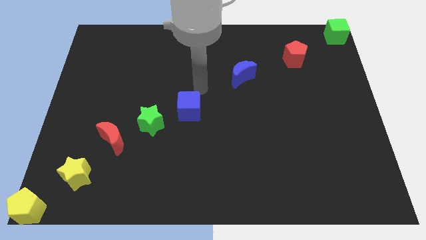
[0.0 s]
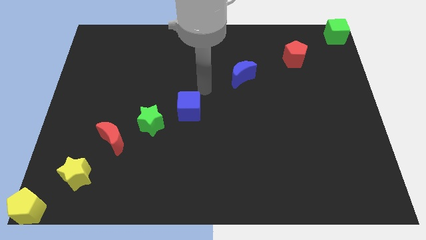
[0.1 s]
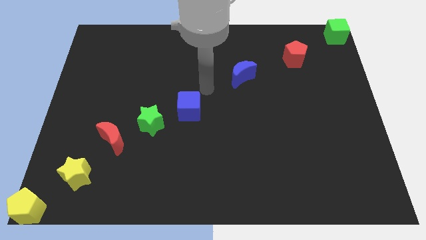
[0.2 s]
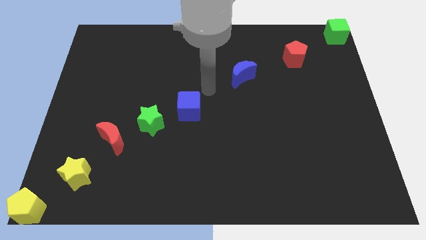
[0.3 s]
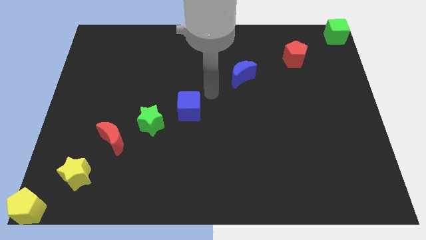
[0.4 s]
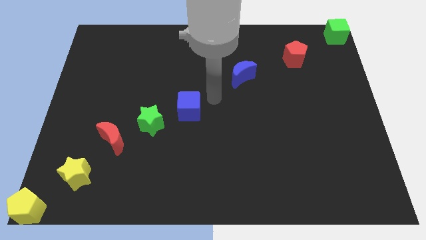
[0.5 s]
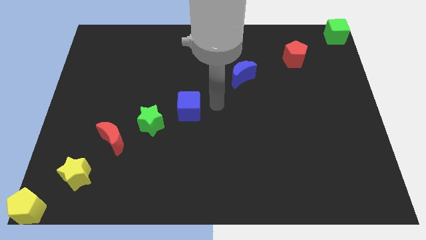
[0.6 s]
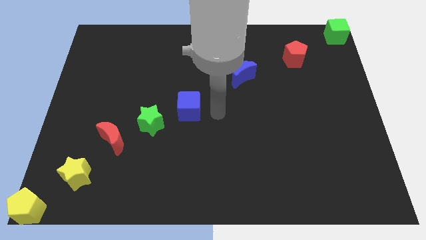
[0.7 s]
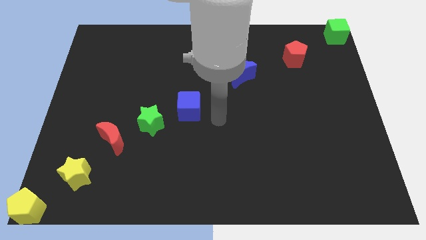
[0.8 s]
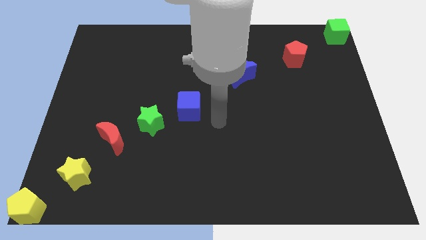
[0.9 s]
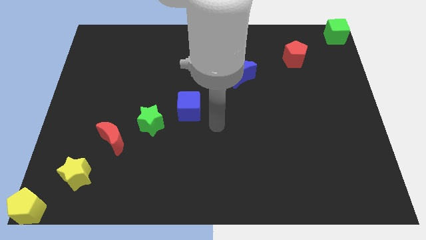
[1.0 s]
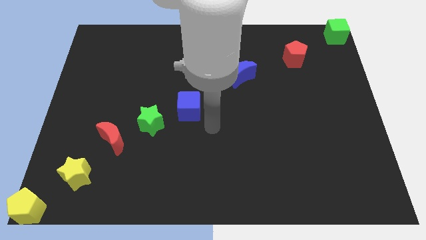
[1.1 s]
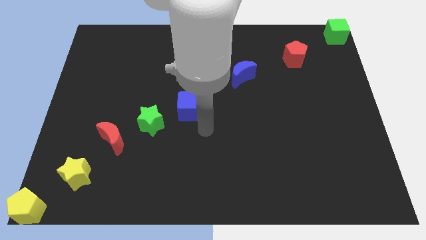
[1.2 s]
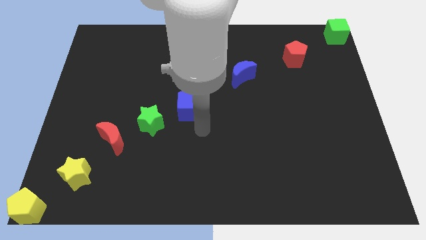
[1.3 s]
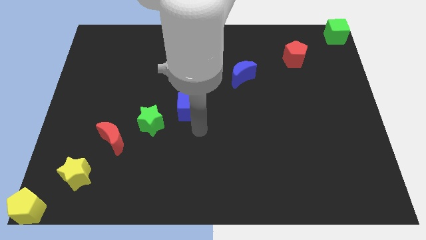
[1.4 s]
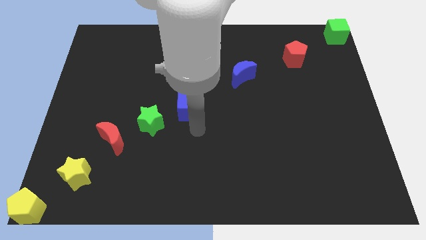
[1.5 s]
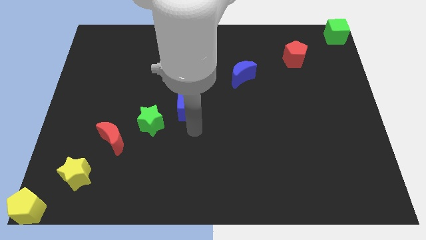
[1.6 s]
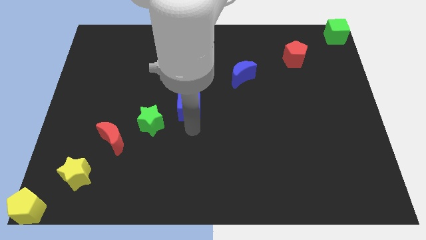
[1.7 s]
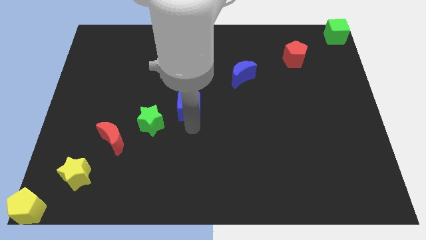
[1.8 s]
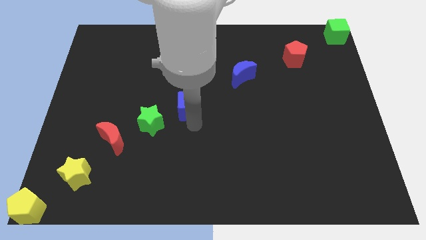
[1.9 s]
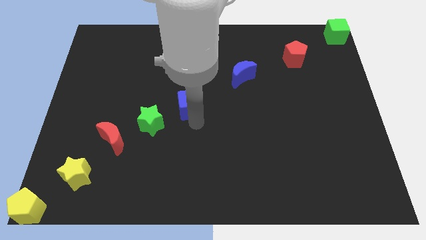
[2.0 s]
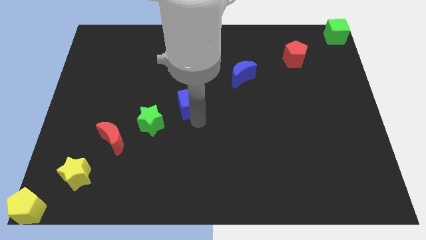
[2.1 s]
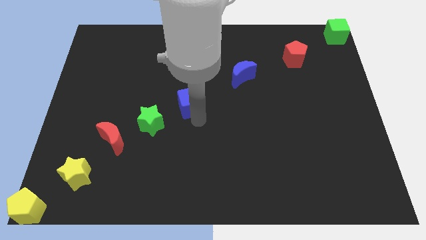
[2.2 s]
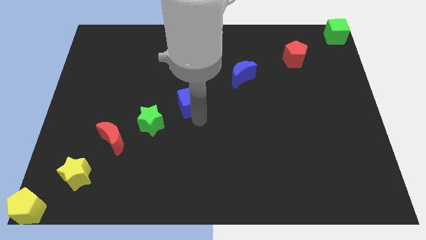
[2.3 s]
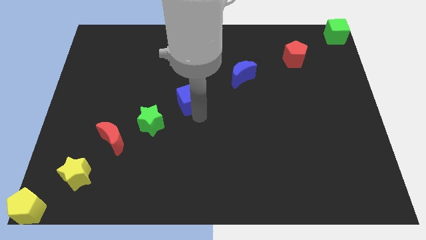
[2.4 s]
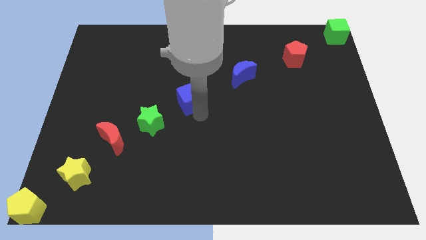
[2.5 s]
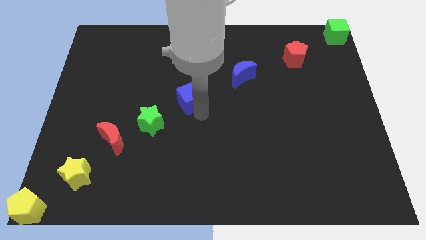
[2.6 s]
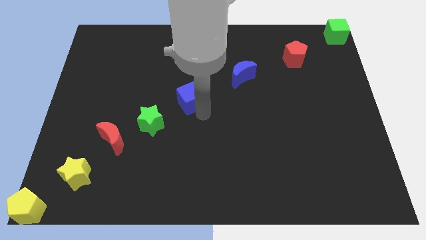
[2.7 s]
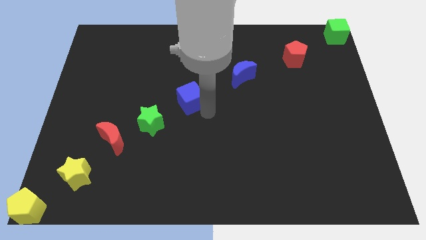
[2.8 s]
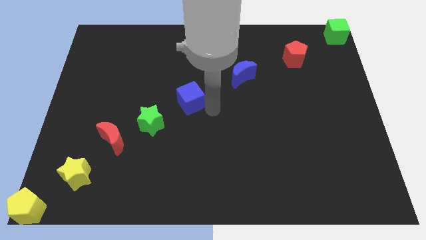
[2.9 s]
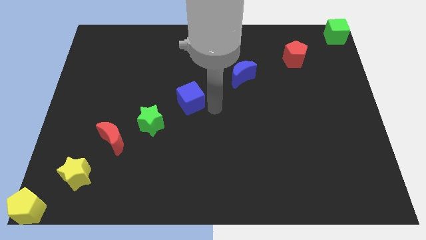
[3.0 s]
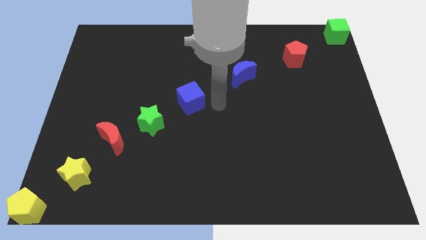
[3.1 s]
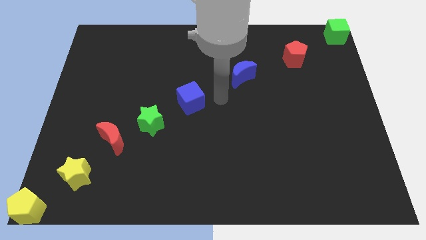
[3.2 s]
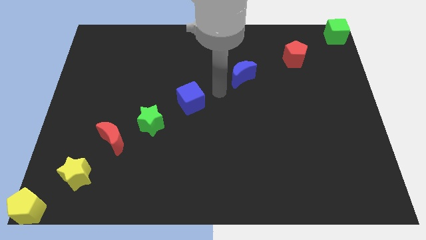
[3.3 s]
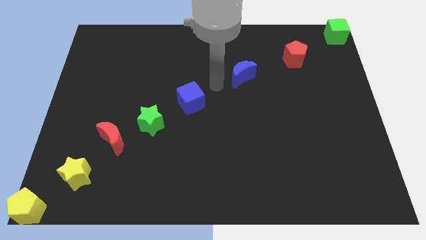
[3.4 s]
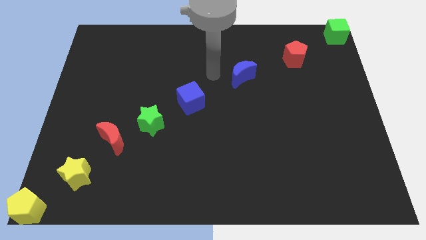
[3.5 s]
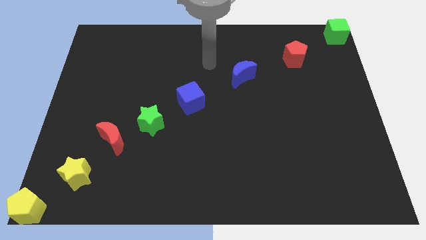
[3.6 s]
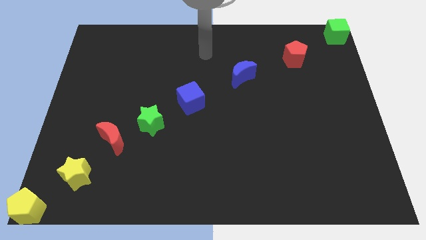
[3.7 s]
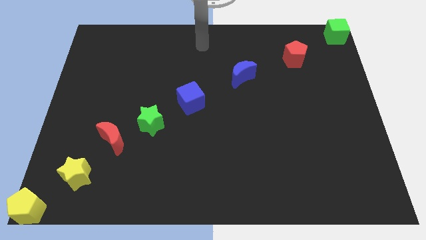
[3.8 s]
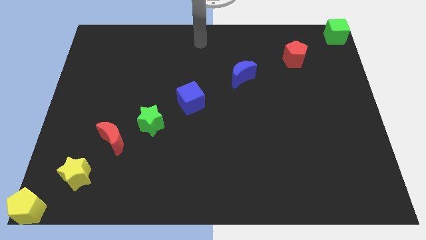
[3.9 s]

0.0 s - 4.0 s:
adjust the blue cube diagonally in between the blue moon and green star

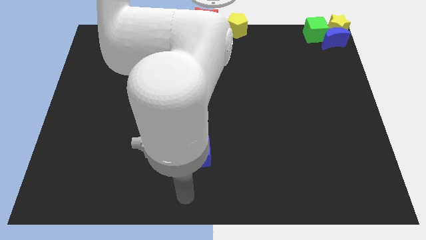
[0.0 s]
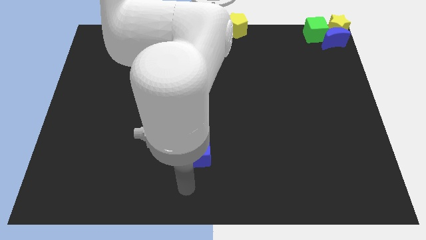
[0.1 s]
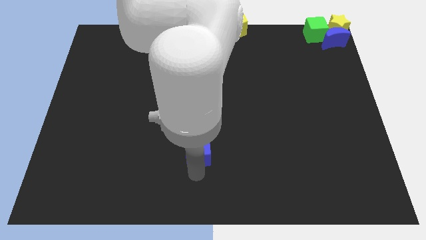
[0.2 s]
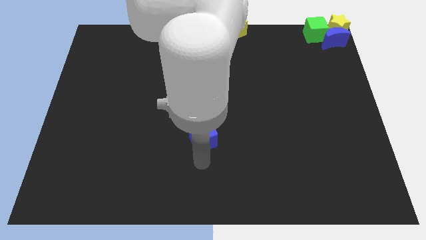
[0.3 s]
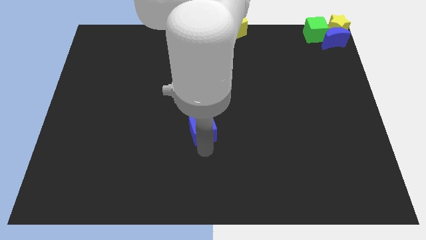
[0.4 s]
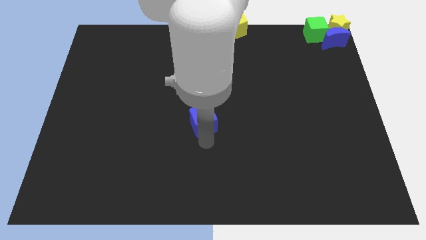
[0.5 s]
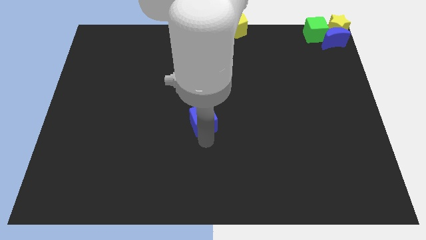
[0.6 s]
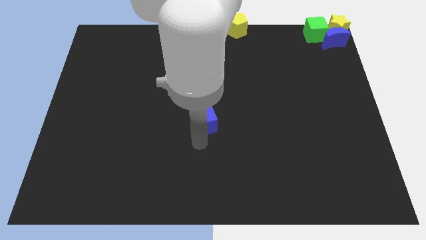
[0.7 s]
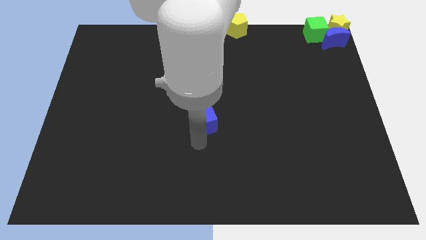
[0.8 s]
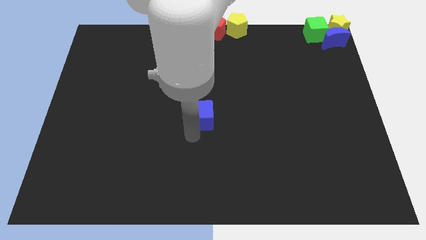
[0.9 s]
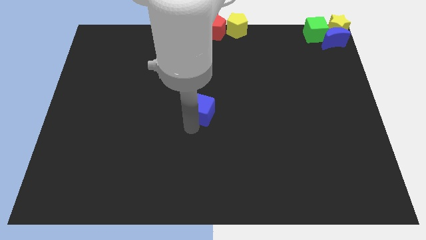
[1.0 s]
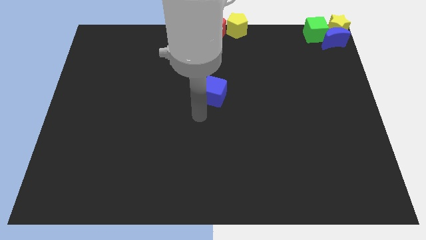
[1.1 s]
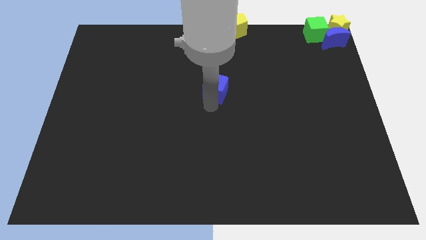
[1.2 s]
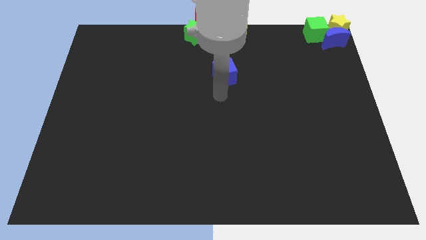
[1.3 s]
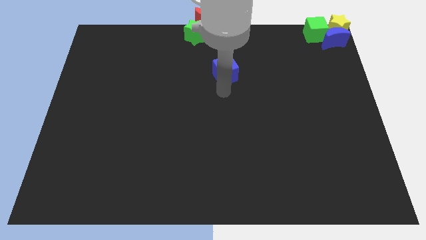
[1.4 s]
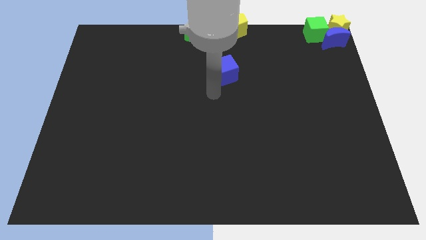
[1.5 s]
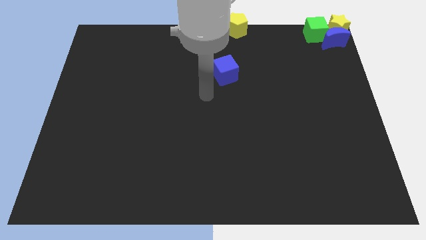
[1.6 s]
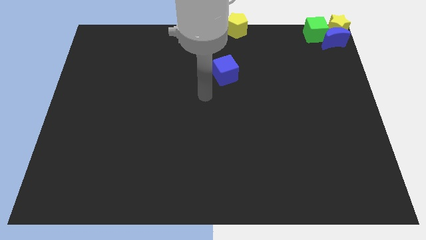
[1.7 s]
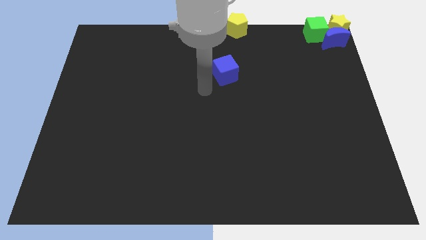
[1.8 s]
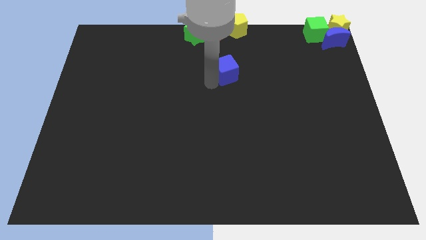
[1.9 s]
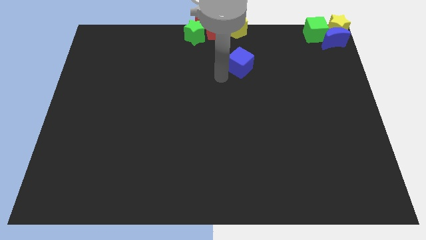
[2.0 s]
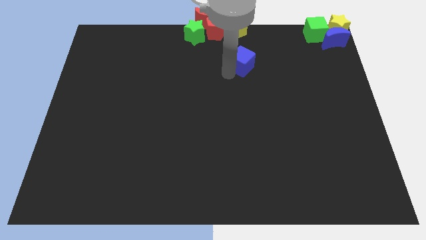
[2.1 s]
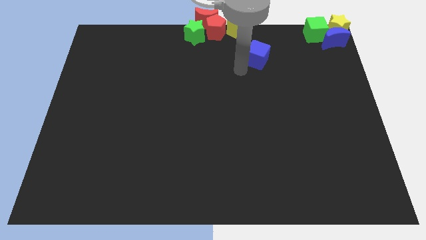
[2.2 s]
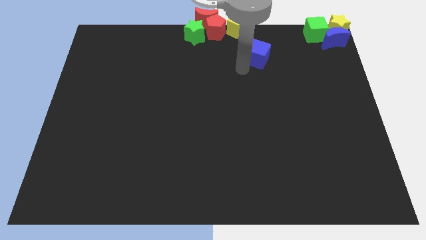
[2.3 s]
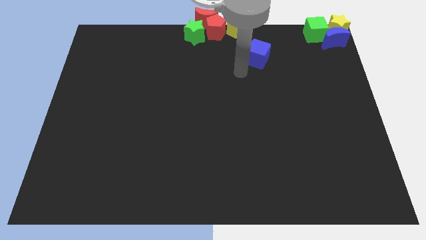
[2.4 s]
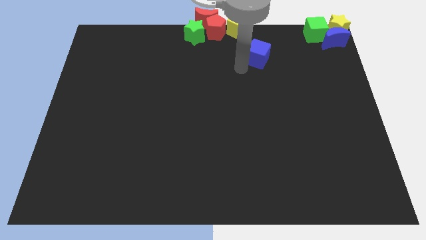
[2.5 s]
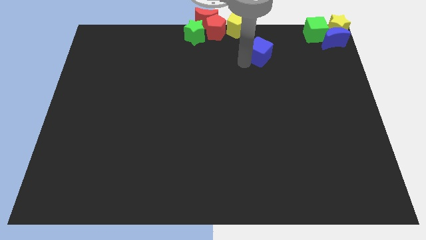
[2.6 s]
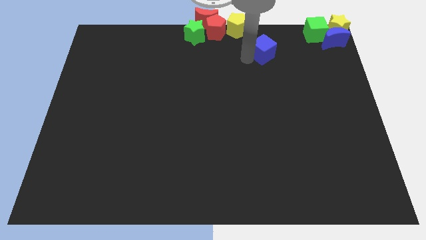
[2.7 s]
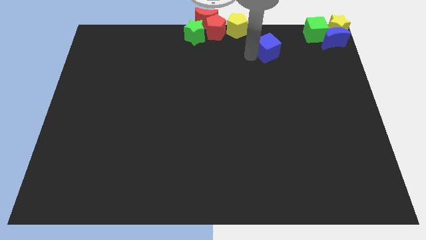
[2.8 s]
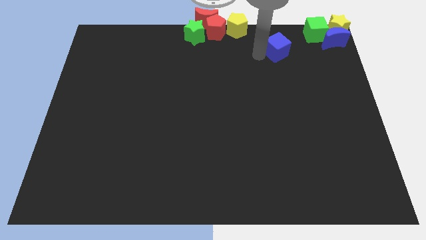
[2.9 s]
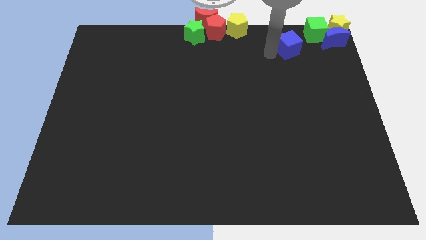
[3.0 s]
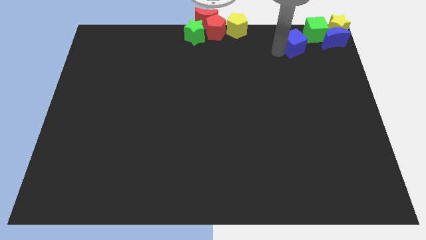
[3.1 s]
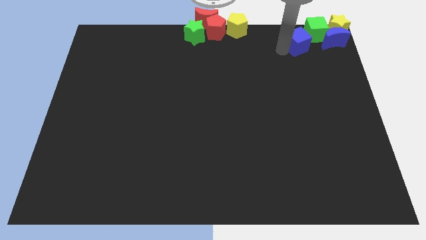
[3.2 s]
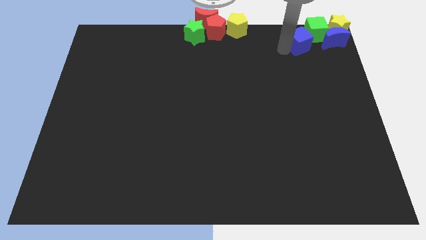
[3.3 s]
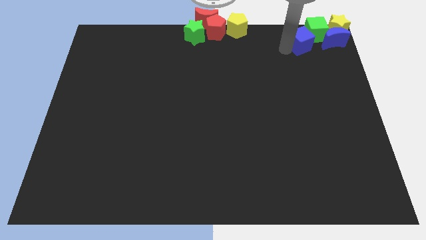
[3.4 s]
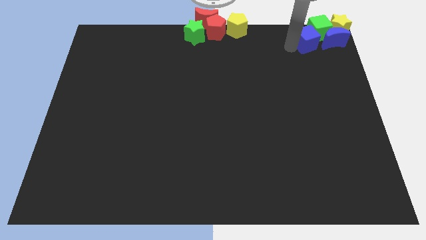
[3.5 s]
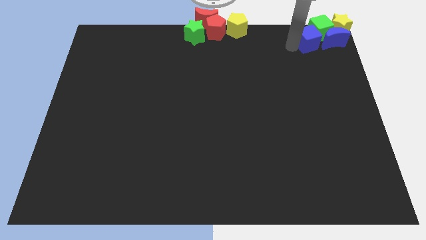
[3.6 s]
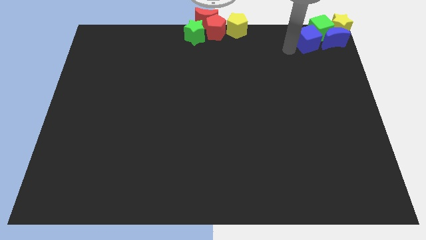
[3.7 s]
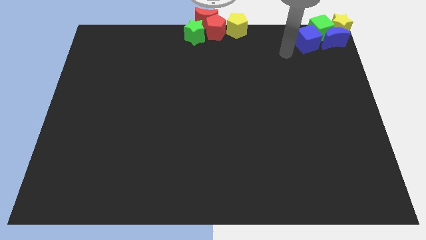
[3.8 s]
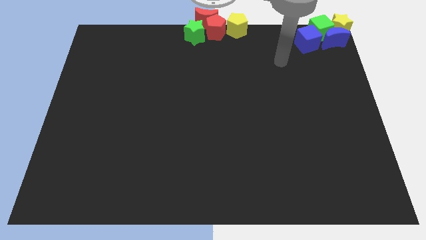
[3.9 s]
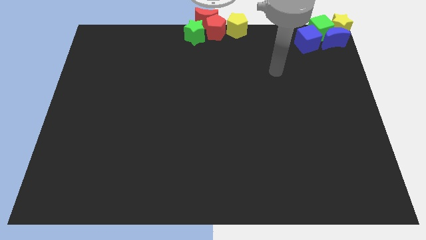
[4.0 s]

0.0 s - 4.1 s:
push the blue cube to the left side of the blue crescent

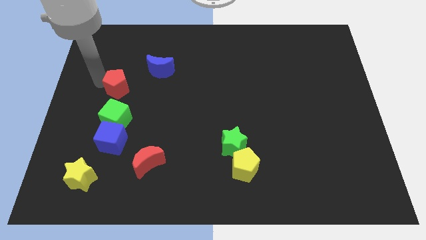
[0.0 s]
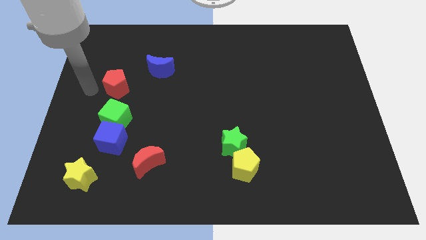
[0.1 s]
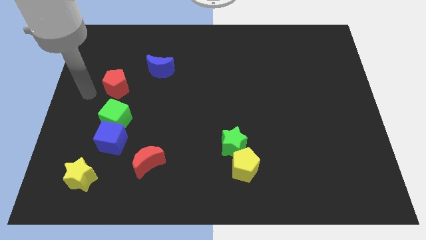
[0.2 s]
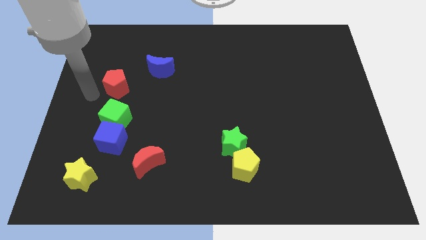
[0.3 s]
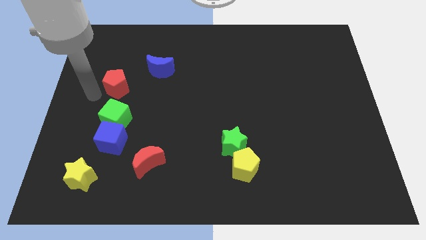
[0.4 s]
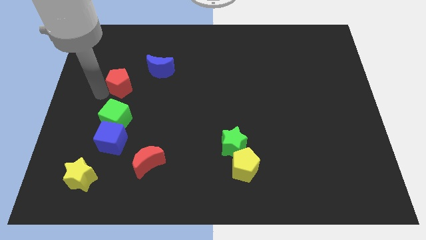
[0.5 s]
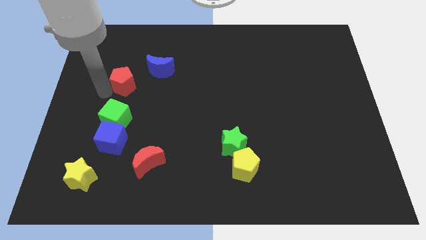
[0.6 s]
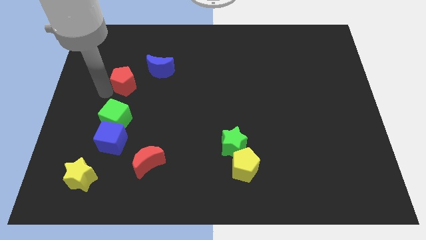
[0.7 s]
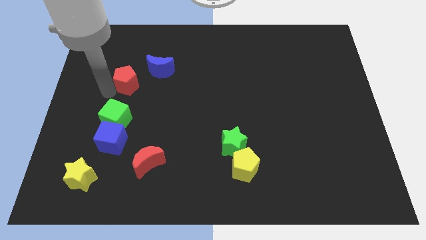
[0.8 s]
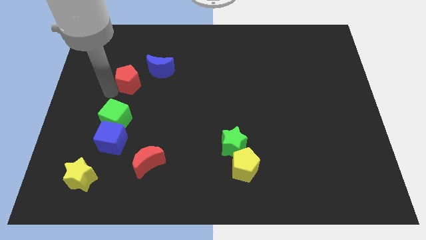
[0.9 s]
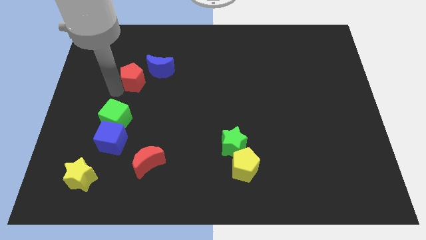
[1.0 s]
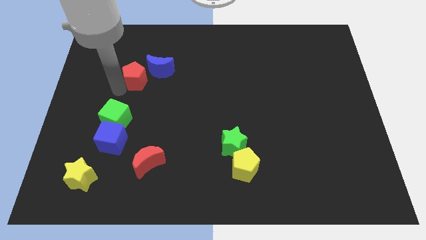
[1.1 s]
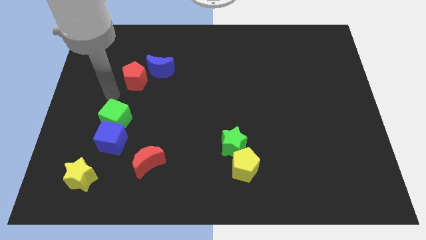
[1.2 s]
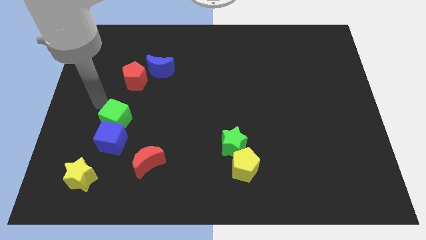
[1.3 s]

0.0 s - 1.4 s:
move red pentagon diagonally left of blue crescent
